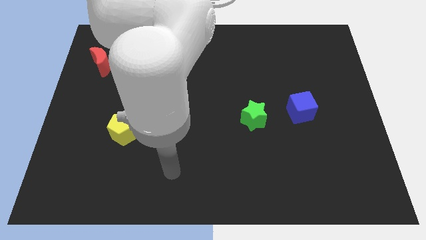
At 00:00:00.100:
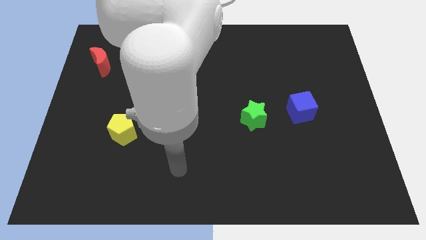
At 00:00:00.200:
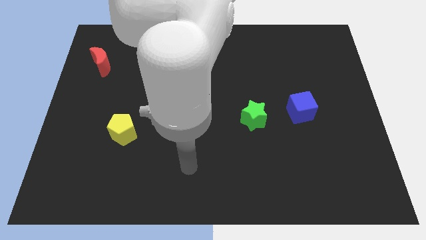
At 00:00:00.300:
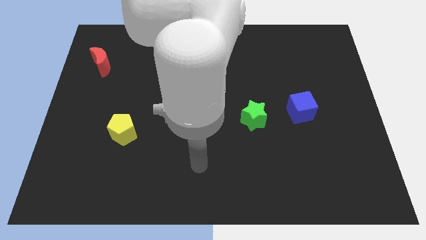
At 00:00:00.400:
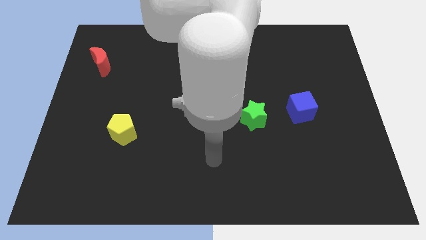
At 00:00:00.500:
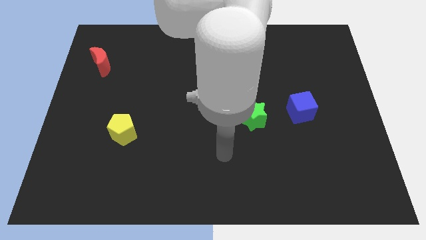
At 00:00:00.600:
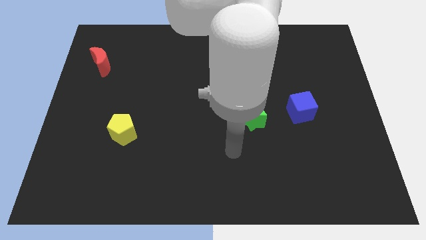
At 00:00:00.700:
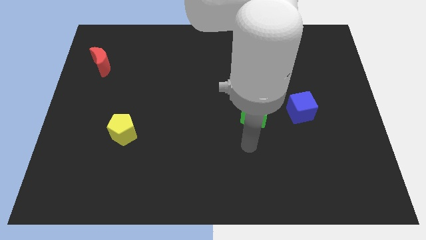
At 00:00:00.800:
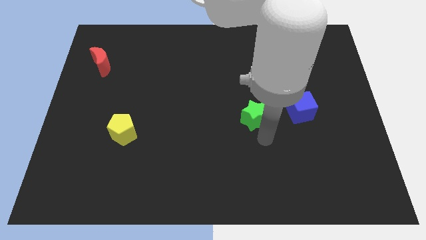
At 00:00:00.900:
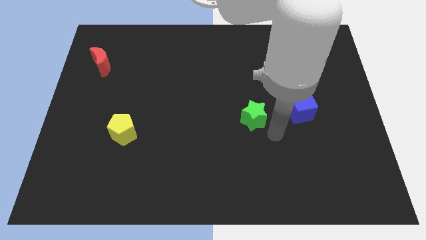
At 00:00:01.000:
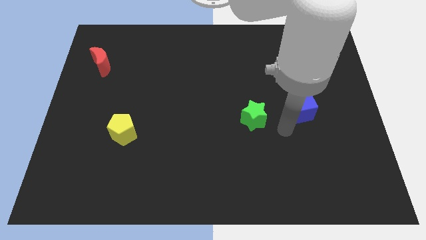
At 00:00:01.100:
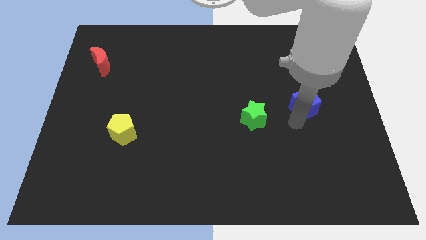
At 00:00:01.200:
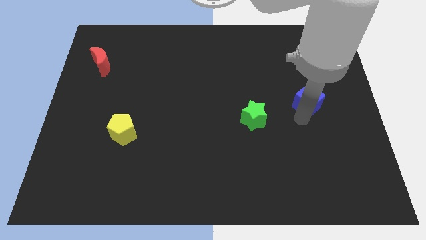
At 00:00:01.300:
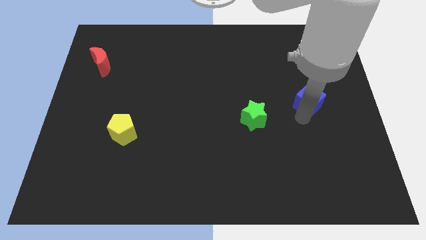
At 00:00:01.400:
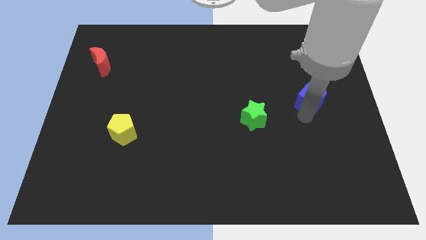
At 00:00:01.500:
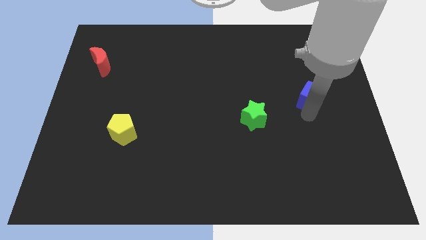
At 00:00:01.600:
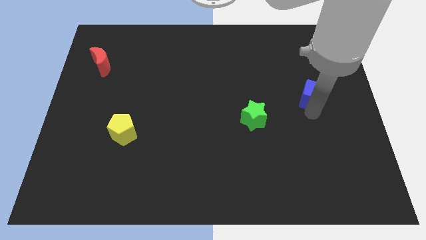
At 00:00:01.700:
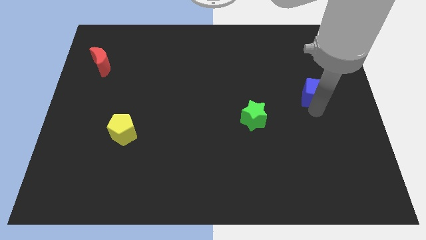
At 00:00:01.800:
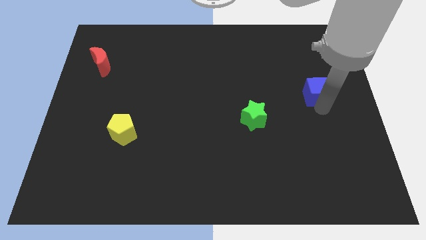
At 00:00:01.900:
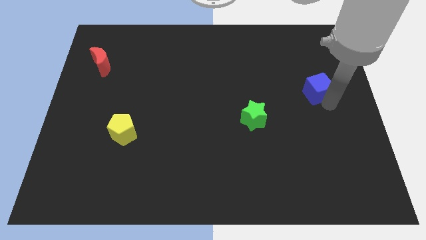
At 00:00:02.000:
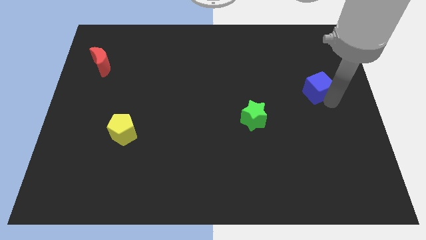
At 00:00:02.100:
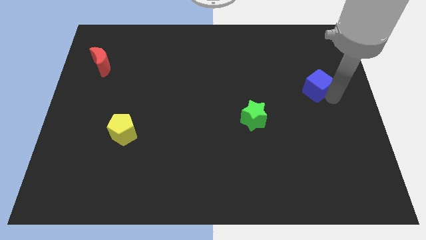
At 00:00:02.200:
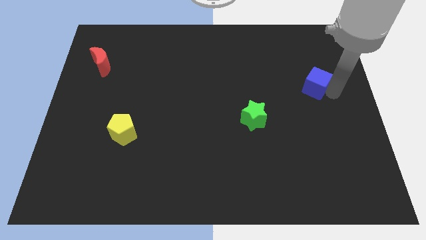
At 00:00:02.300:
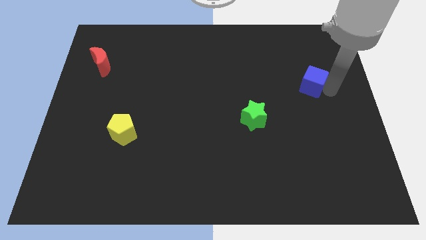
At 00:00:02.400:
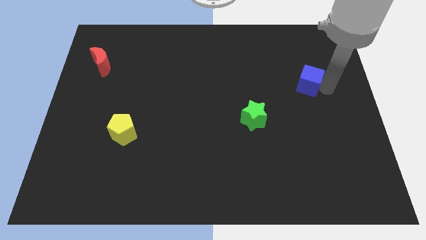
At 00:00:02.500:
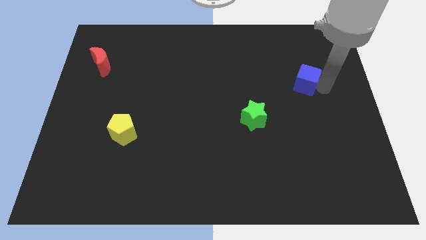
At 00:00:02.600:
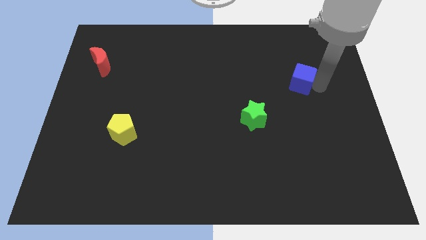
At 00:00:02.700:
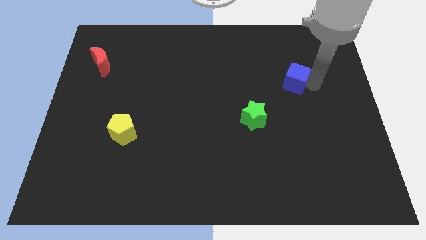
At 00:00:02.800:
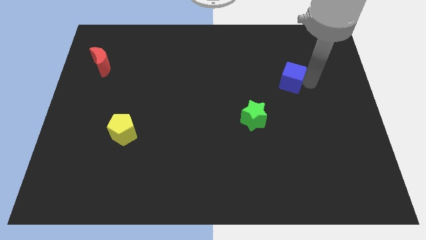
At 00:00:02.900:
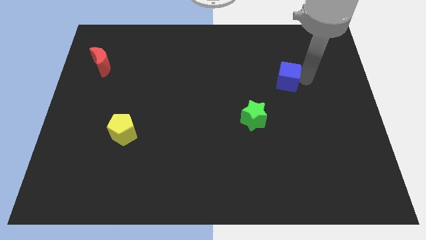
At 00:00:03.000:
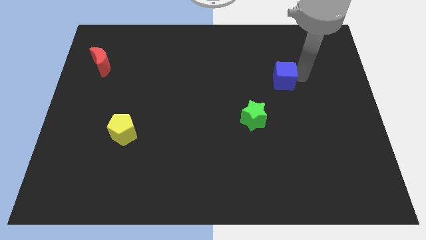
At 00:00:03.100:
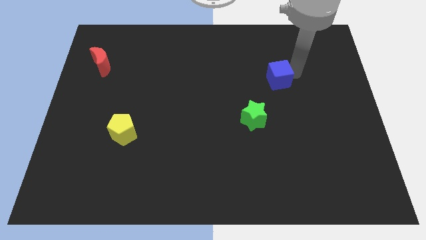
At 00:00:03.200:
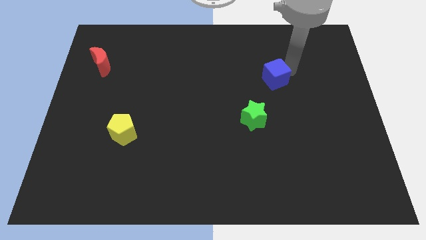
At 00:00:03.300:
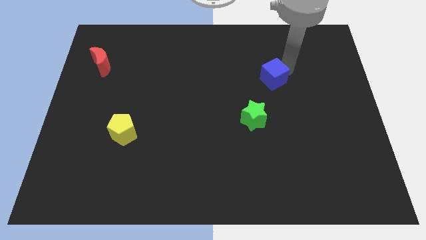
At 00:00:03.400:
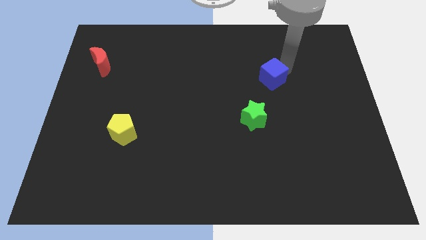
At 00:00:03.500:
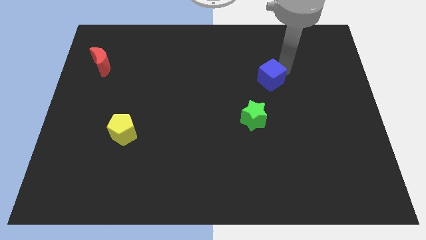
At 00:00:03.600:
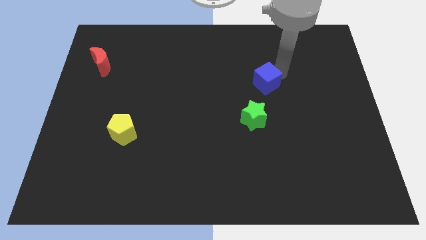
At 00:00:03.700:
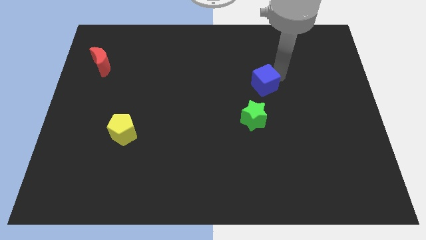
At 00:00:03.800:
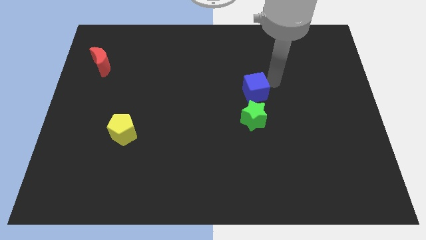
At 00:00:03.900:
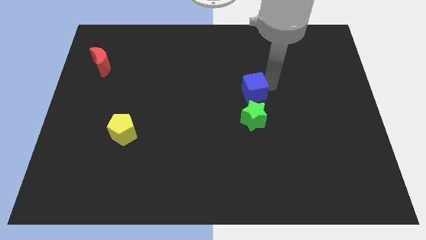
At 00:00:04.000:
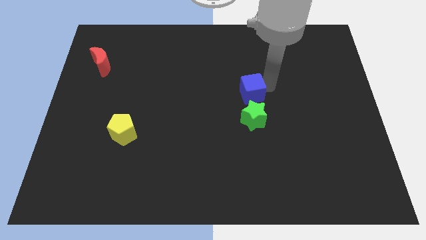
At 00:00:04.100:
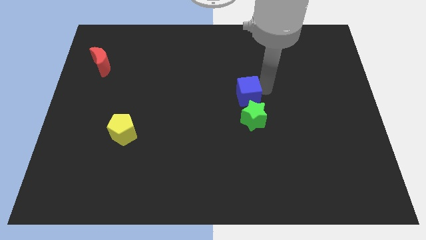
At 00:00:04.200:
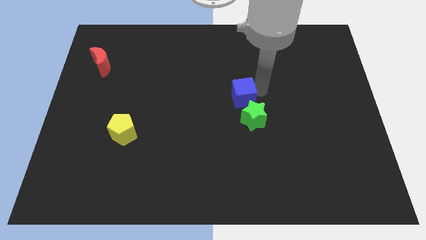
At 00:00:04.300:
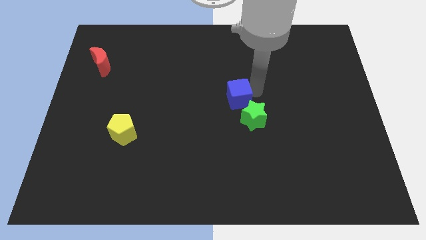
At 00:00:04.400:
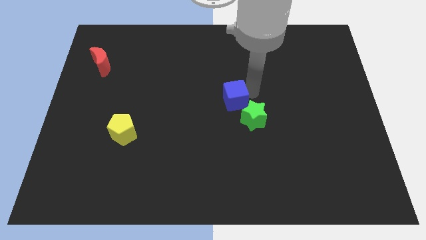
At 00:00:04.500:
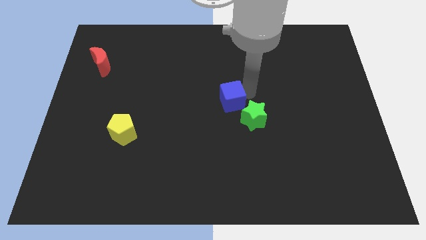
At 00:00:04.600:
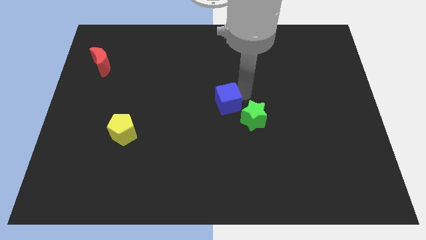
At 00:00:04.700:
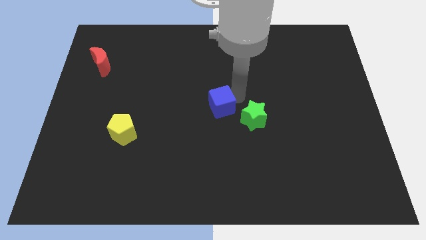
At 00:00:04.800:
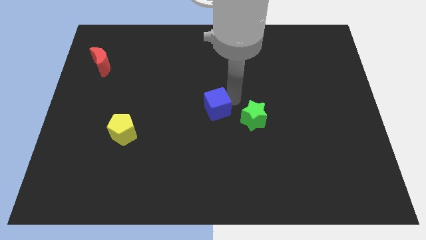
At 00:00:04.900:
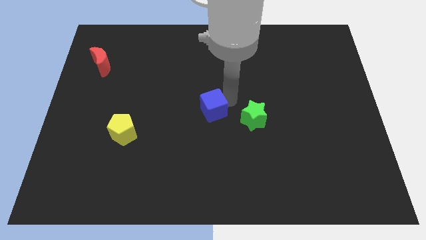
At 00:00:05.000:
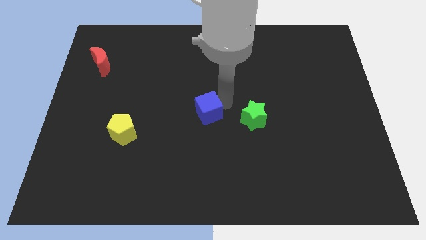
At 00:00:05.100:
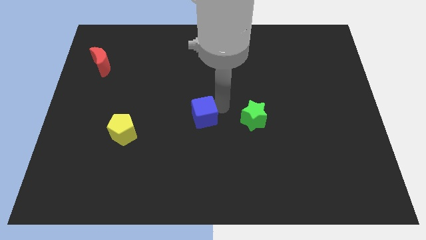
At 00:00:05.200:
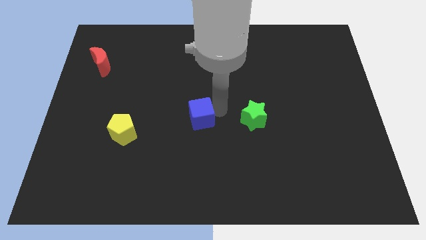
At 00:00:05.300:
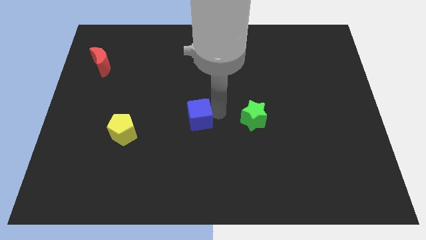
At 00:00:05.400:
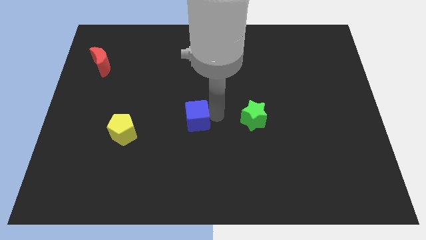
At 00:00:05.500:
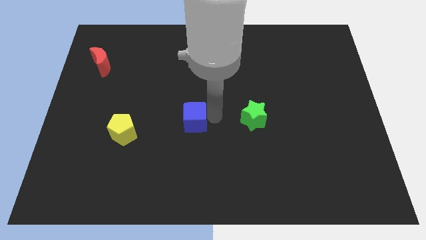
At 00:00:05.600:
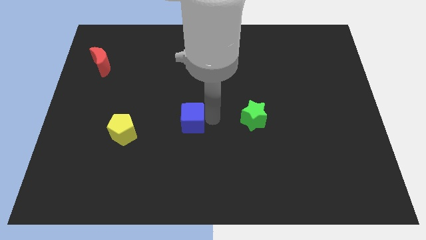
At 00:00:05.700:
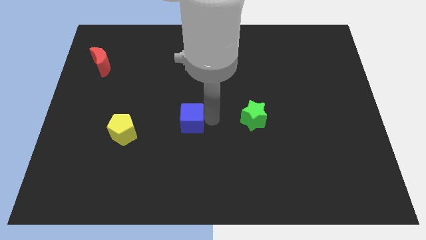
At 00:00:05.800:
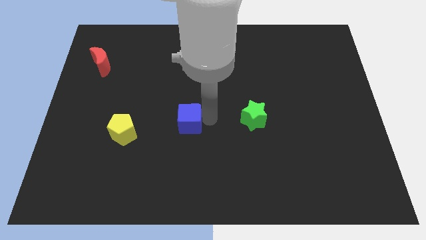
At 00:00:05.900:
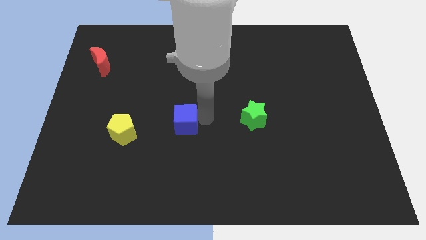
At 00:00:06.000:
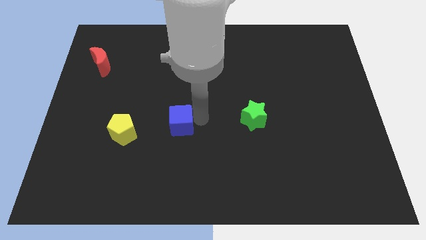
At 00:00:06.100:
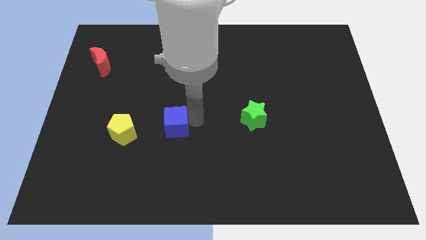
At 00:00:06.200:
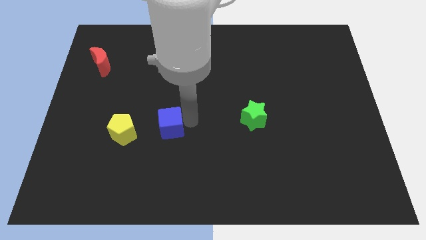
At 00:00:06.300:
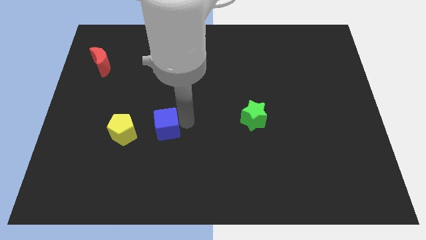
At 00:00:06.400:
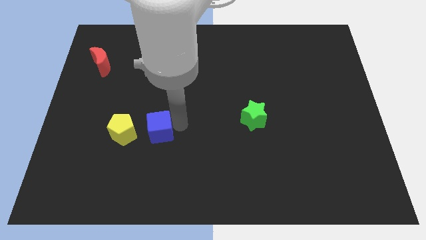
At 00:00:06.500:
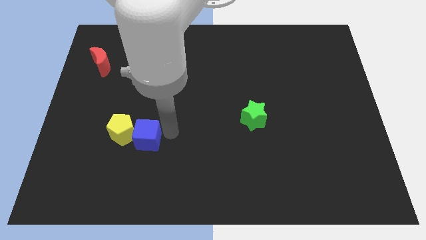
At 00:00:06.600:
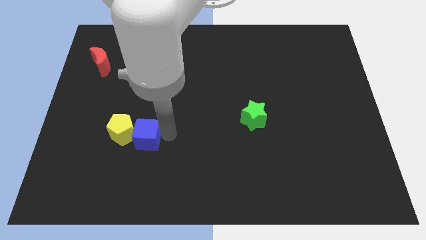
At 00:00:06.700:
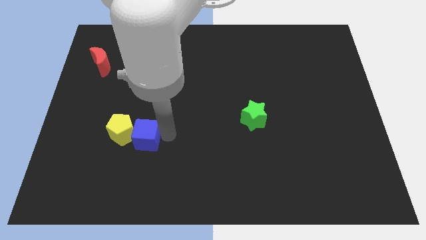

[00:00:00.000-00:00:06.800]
push the blue block to the pentagon

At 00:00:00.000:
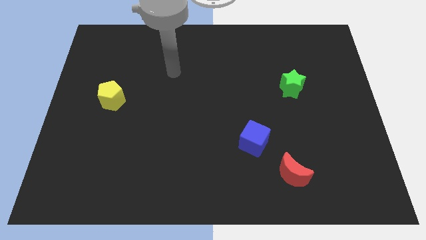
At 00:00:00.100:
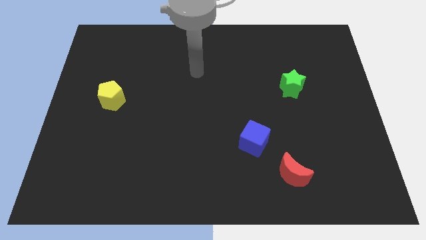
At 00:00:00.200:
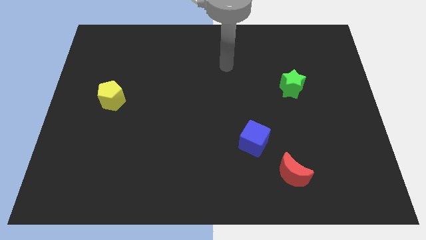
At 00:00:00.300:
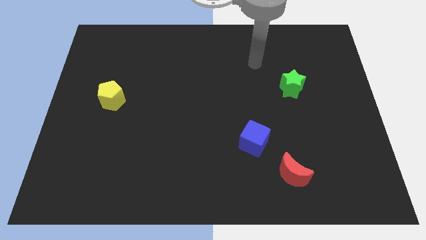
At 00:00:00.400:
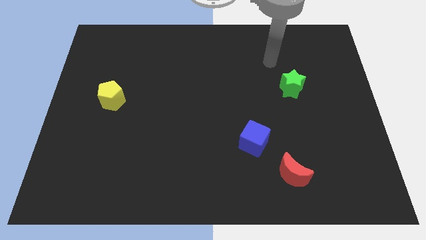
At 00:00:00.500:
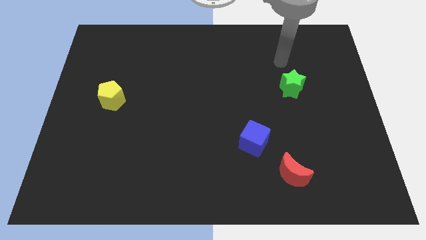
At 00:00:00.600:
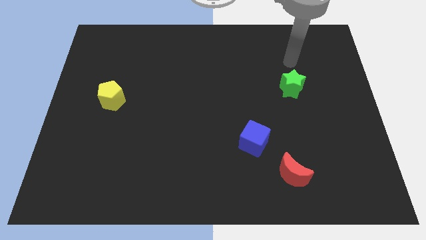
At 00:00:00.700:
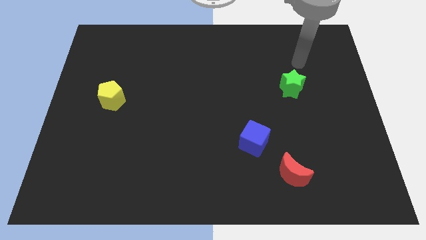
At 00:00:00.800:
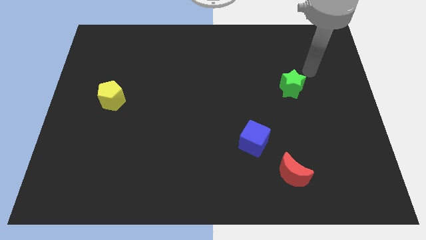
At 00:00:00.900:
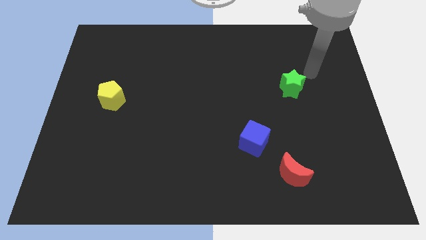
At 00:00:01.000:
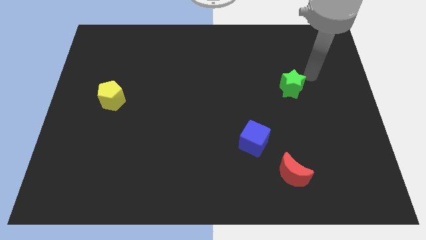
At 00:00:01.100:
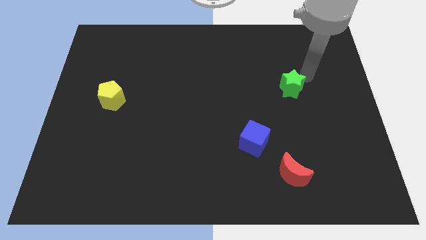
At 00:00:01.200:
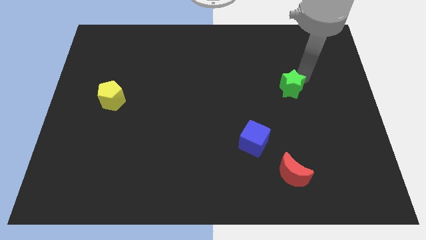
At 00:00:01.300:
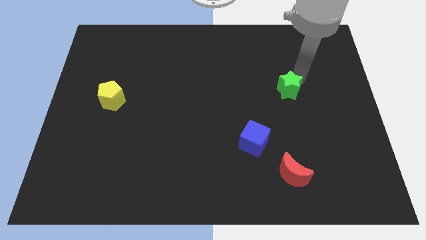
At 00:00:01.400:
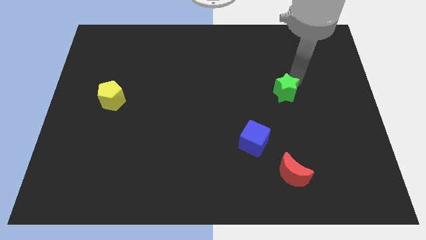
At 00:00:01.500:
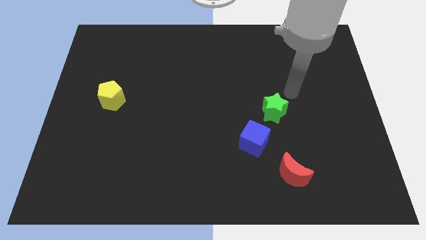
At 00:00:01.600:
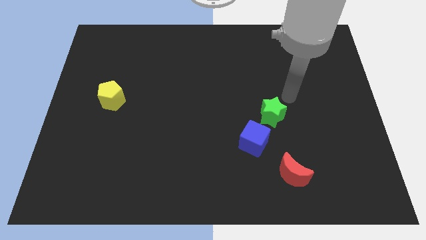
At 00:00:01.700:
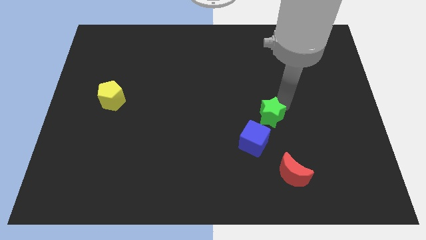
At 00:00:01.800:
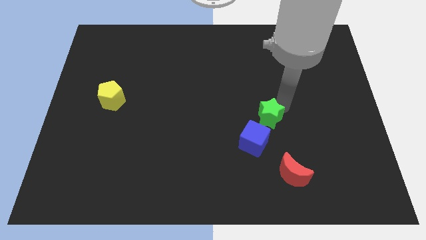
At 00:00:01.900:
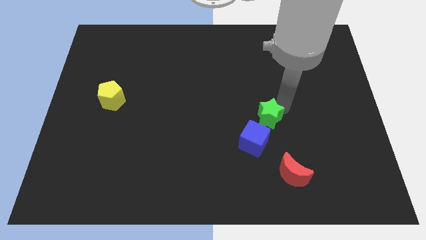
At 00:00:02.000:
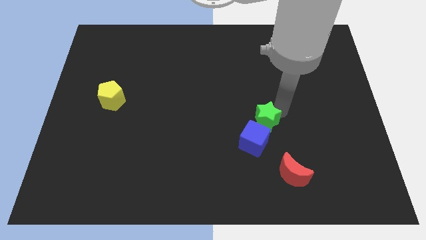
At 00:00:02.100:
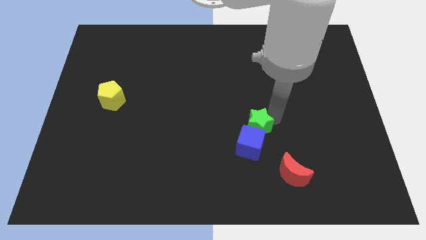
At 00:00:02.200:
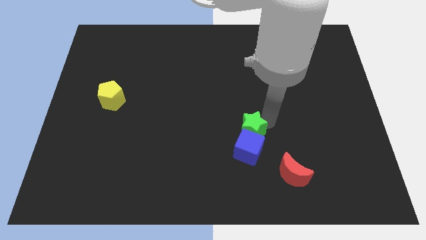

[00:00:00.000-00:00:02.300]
move the green block close to the blue cube
